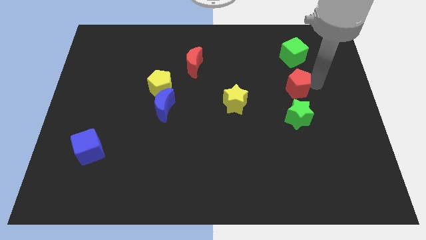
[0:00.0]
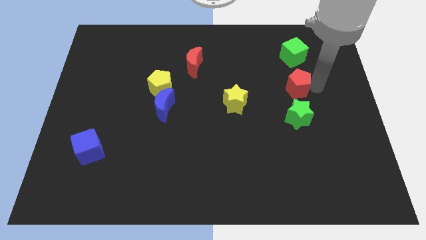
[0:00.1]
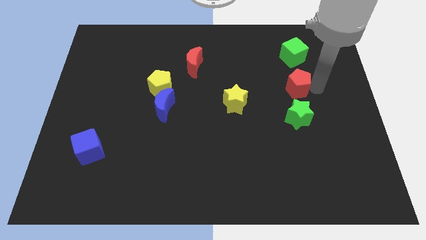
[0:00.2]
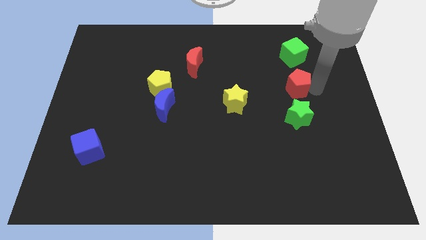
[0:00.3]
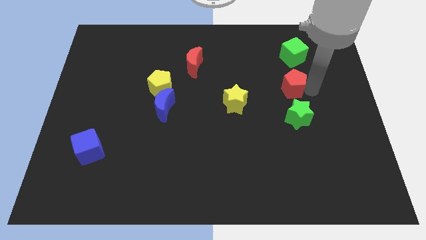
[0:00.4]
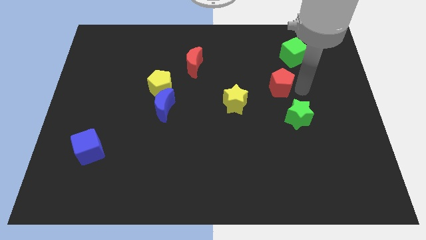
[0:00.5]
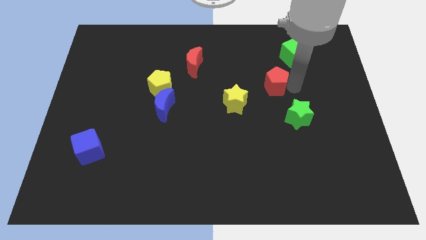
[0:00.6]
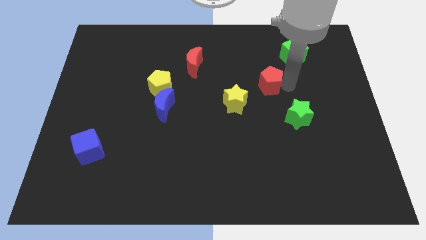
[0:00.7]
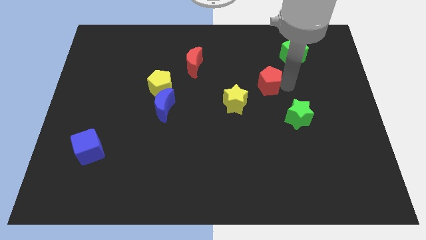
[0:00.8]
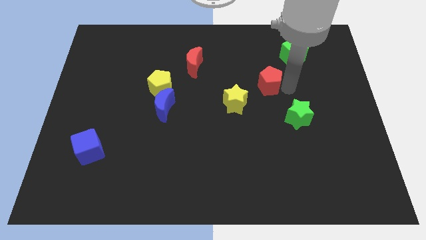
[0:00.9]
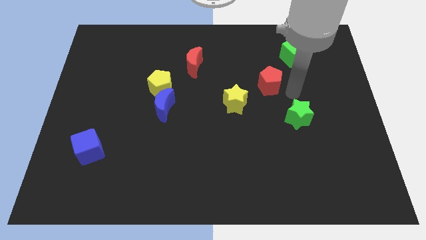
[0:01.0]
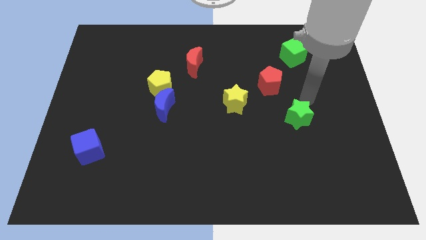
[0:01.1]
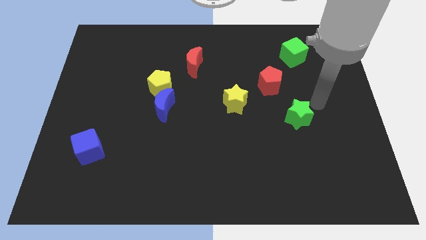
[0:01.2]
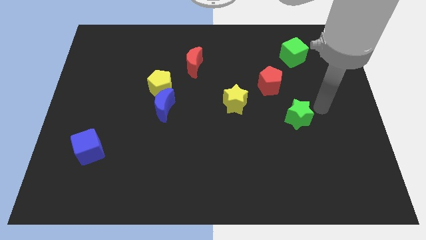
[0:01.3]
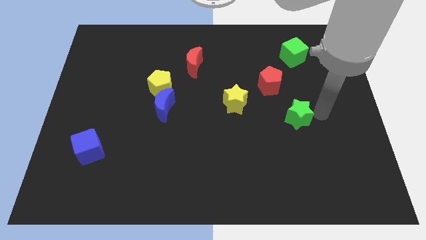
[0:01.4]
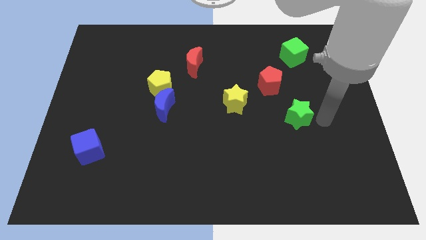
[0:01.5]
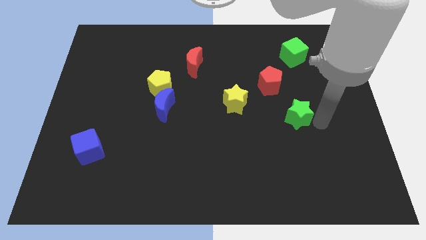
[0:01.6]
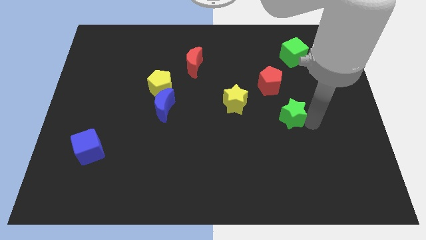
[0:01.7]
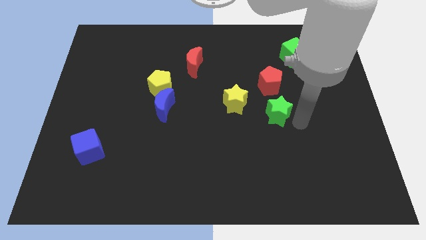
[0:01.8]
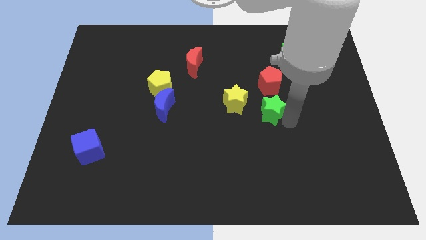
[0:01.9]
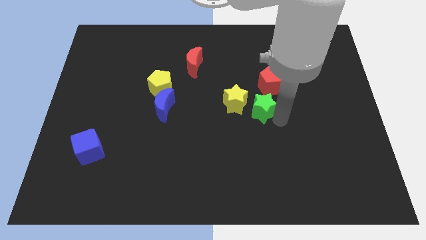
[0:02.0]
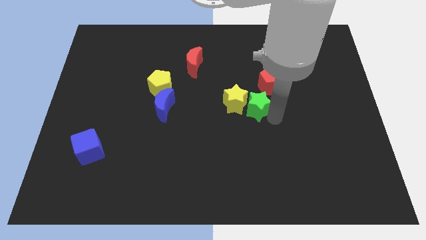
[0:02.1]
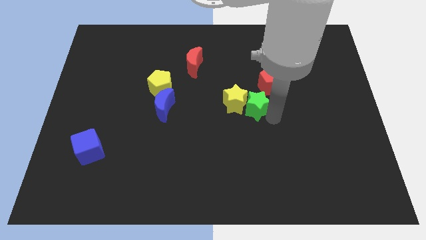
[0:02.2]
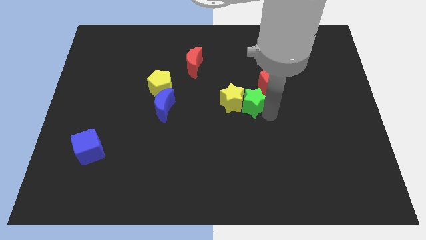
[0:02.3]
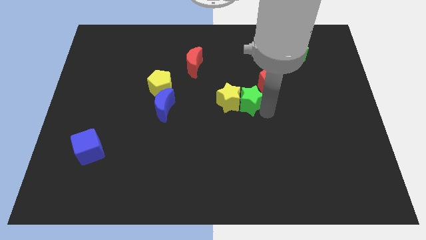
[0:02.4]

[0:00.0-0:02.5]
push the green star into the yellow star

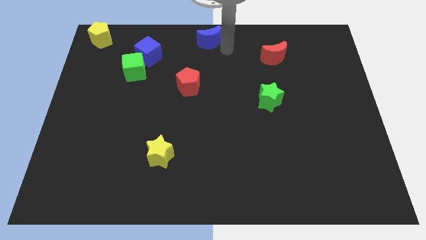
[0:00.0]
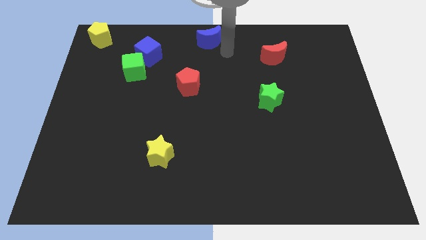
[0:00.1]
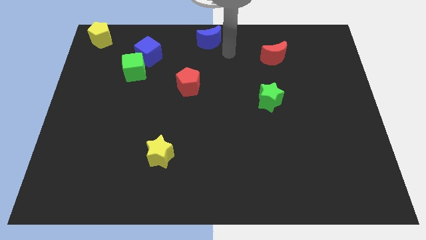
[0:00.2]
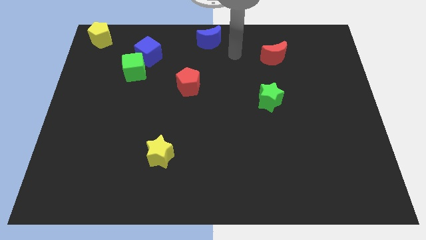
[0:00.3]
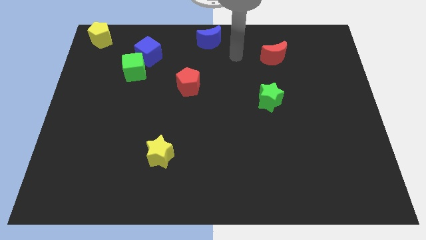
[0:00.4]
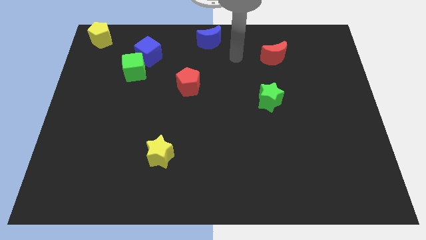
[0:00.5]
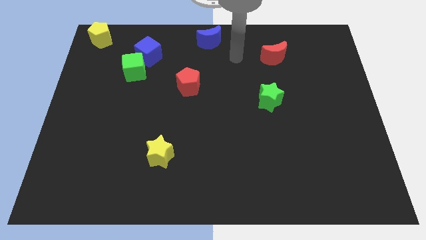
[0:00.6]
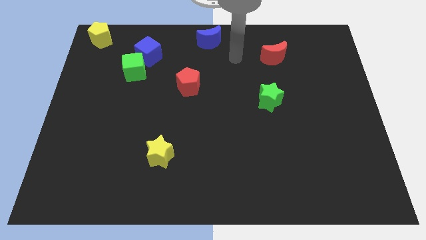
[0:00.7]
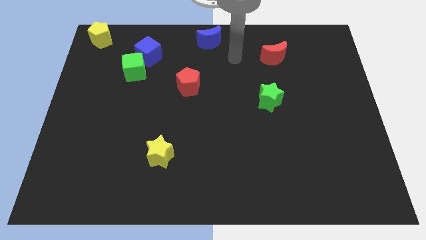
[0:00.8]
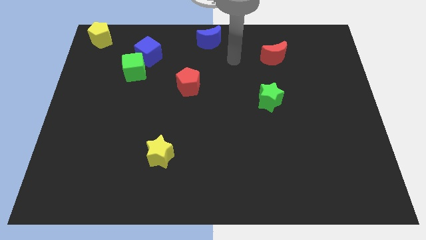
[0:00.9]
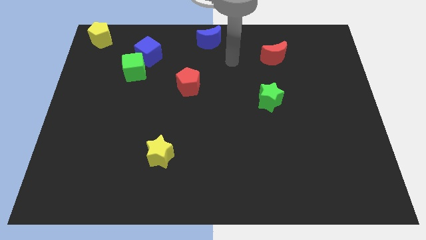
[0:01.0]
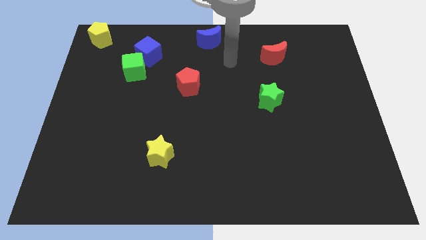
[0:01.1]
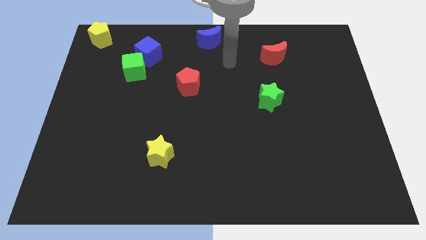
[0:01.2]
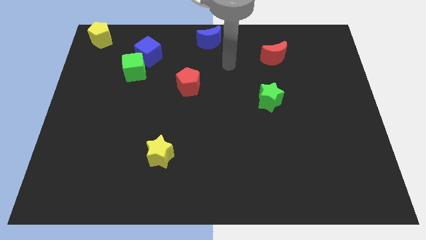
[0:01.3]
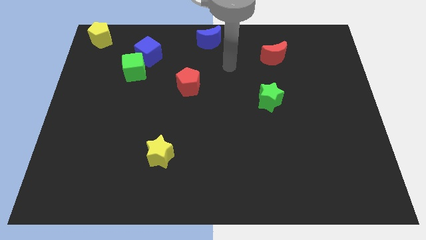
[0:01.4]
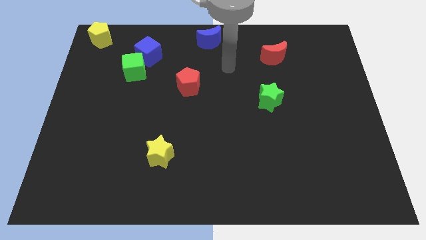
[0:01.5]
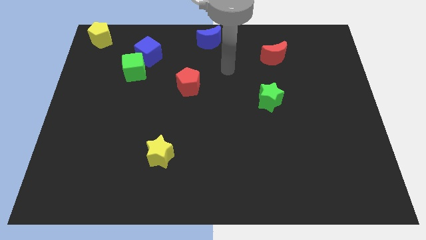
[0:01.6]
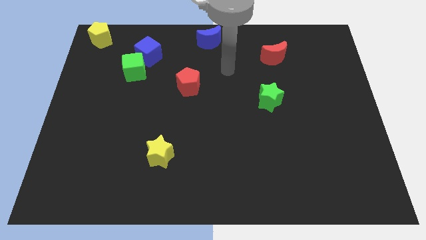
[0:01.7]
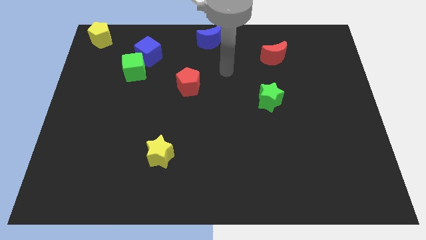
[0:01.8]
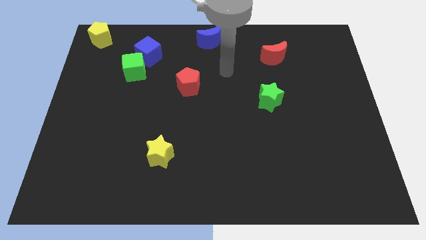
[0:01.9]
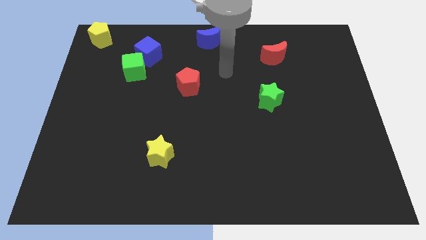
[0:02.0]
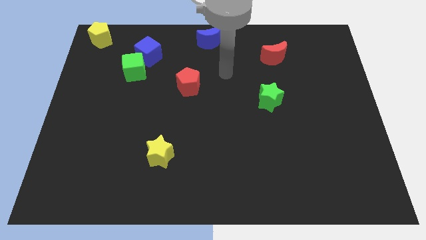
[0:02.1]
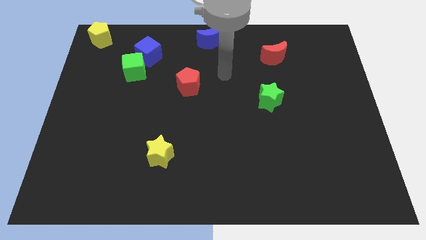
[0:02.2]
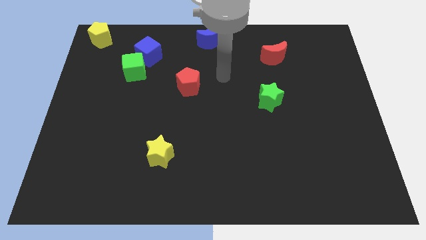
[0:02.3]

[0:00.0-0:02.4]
point your arm in between the red blocks

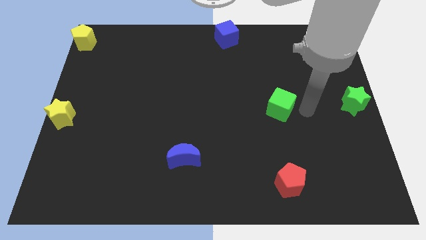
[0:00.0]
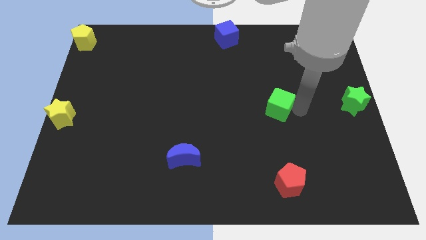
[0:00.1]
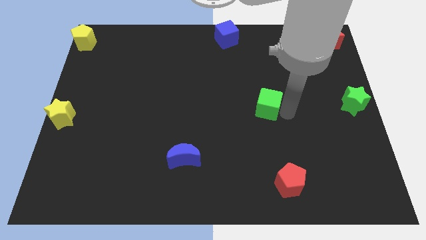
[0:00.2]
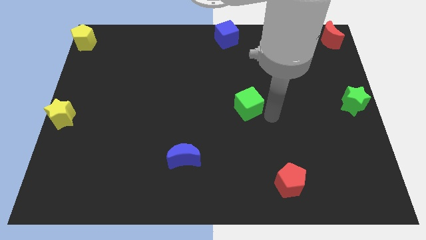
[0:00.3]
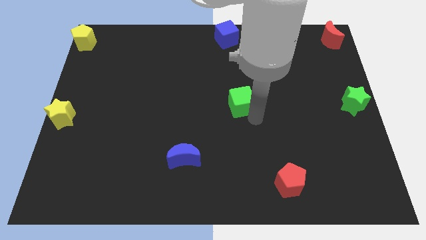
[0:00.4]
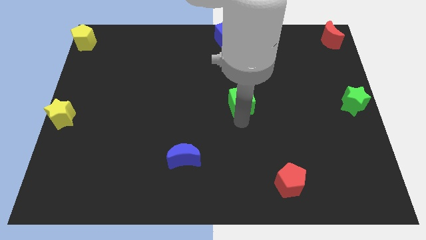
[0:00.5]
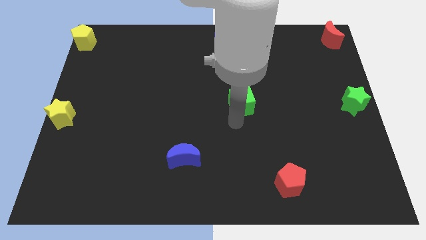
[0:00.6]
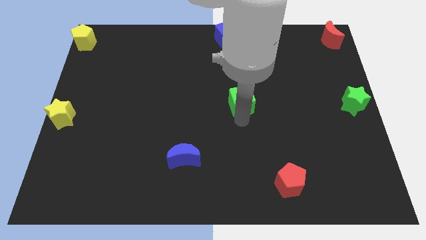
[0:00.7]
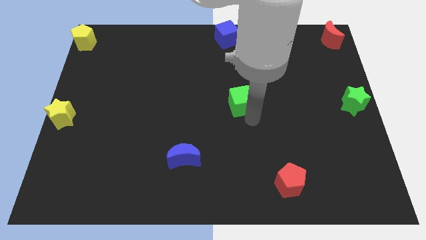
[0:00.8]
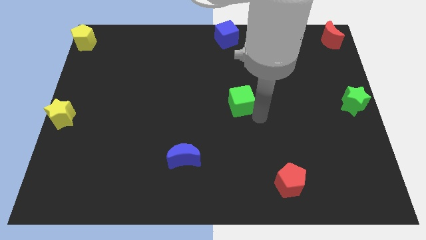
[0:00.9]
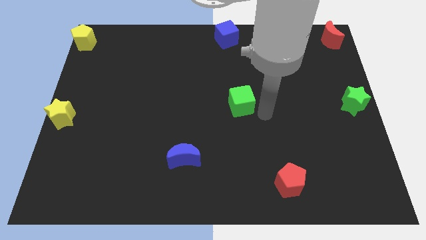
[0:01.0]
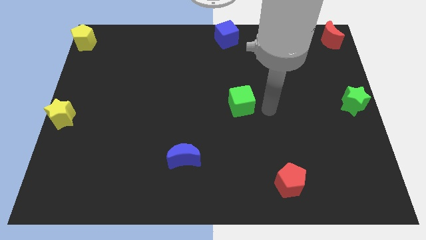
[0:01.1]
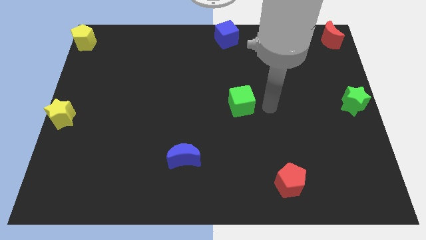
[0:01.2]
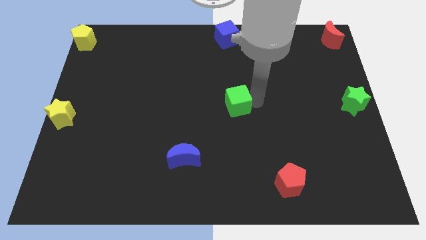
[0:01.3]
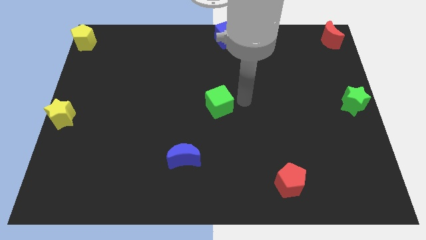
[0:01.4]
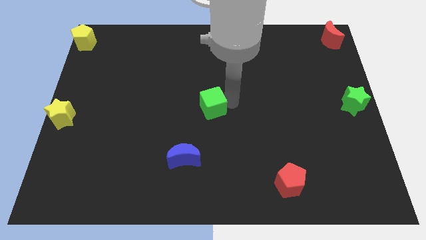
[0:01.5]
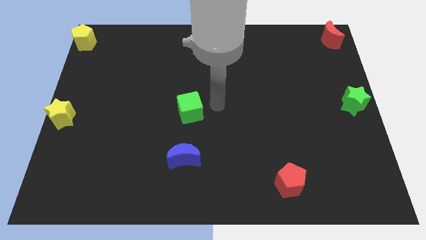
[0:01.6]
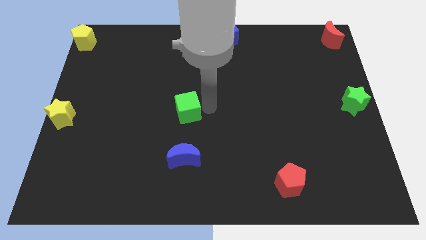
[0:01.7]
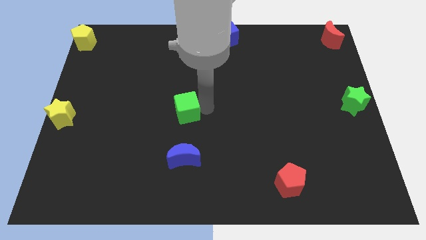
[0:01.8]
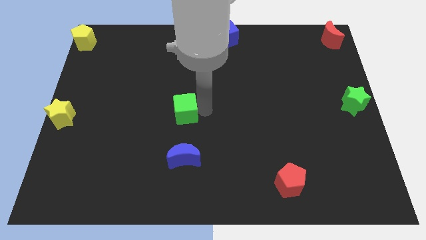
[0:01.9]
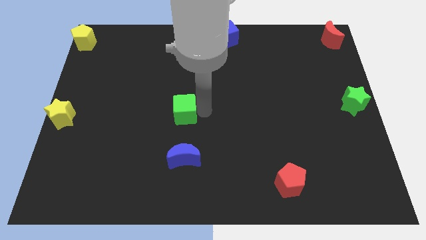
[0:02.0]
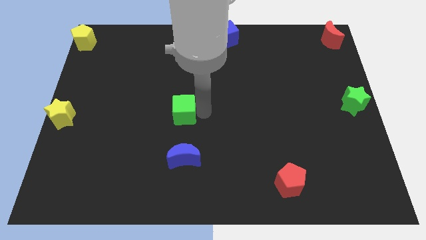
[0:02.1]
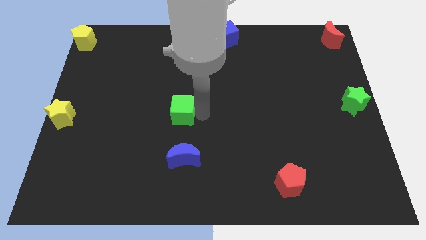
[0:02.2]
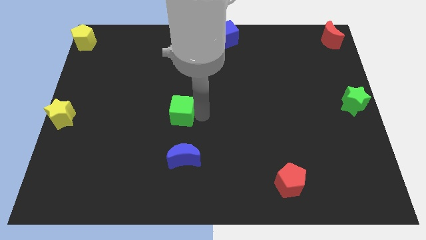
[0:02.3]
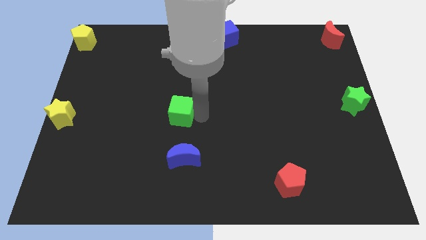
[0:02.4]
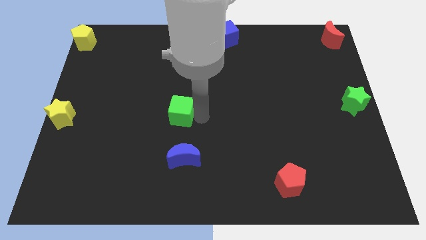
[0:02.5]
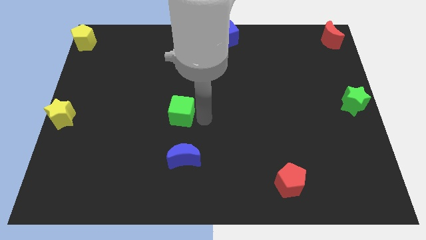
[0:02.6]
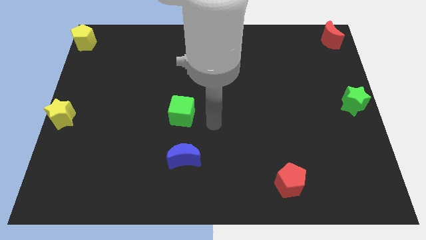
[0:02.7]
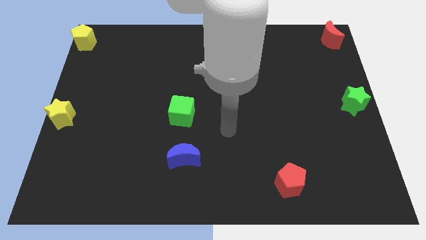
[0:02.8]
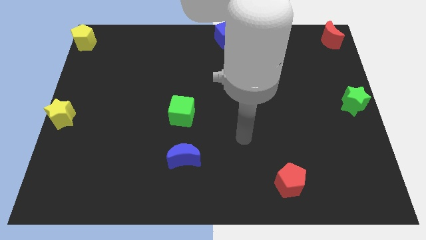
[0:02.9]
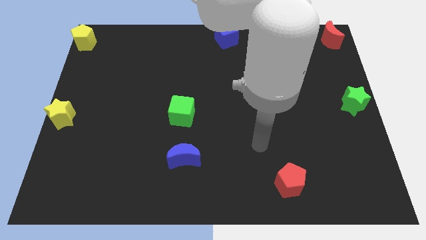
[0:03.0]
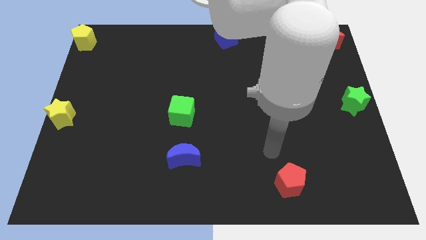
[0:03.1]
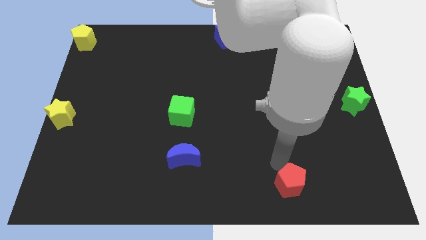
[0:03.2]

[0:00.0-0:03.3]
place the green cube vertically above the blue moon

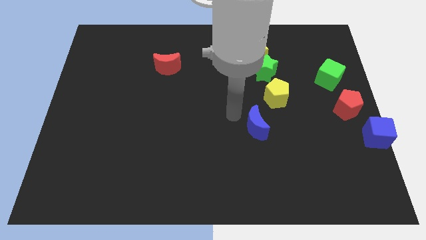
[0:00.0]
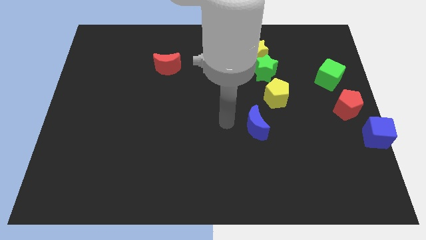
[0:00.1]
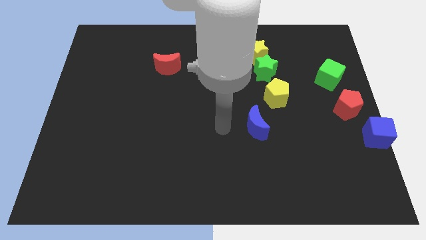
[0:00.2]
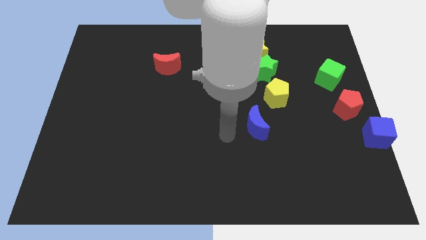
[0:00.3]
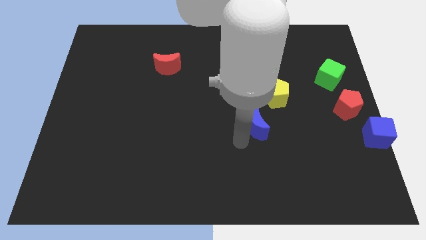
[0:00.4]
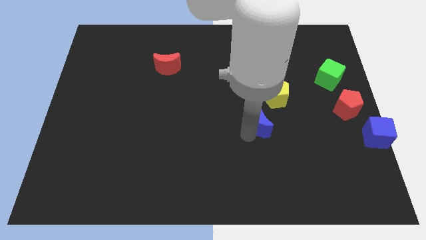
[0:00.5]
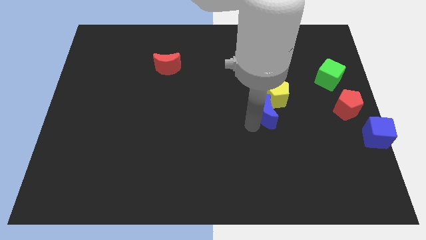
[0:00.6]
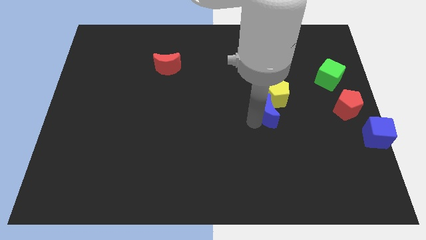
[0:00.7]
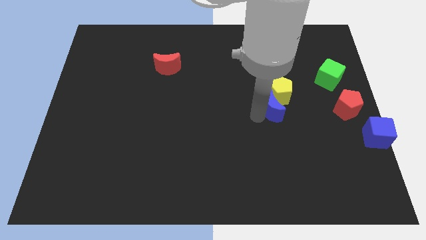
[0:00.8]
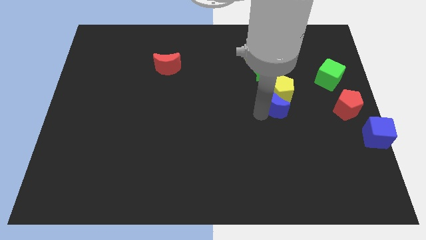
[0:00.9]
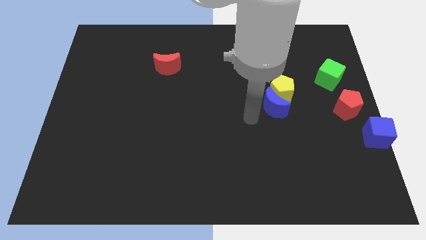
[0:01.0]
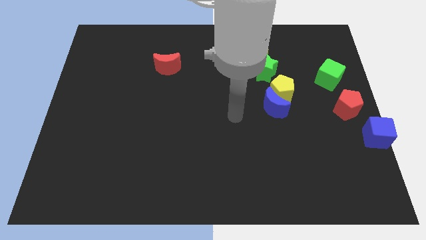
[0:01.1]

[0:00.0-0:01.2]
push the blue crescent into the yellow pentagon
